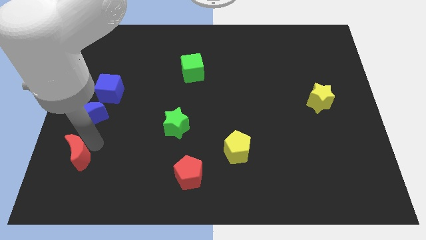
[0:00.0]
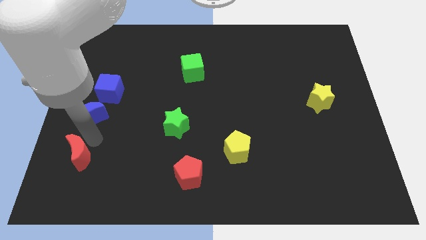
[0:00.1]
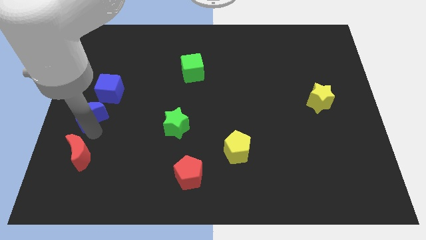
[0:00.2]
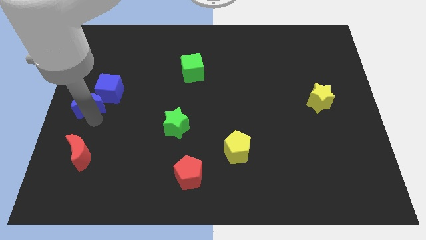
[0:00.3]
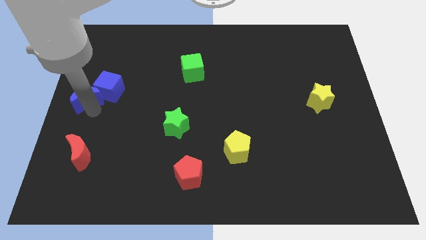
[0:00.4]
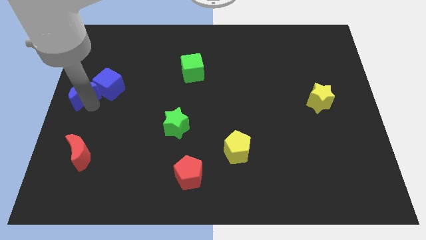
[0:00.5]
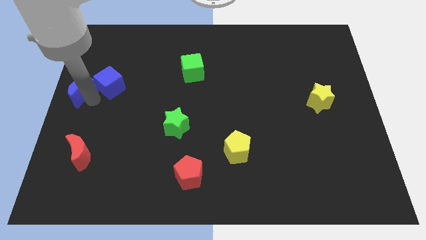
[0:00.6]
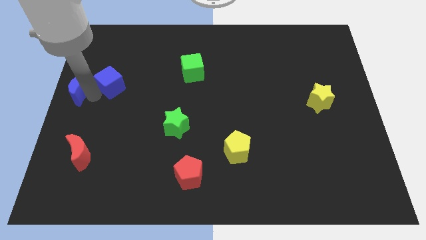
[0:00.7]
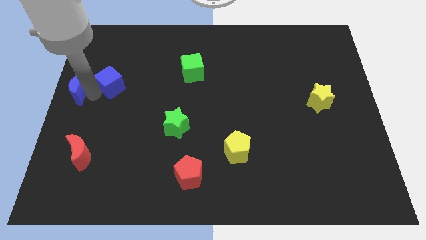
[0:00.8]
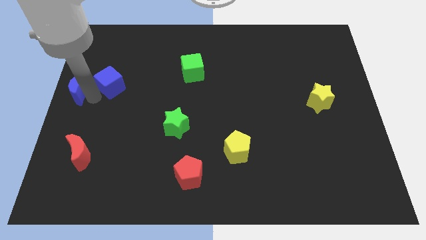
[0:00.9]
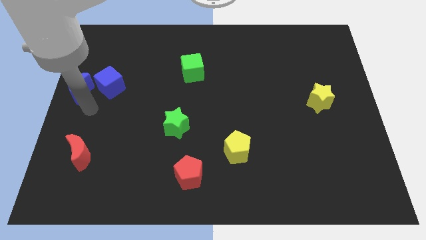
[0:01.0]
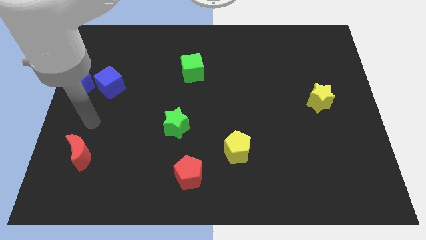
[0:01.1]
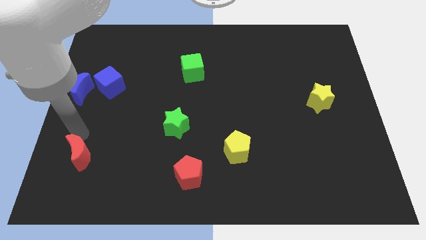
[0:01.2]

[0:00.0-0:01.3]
place blue moon to the left of blue cube

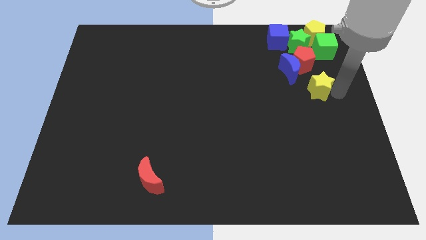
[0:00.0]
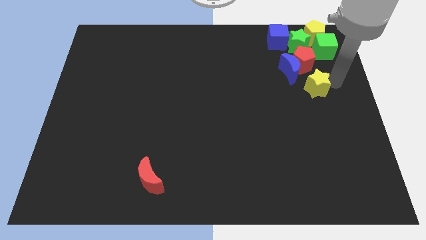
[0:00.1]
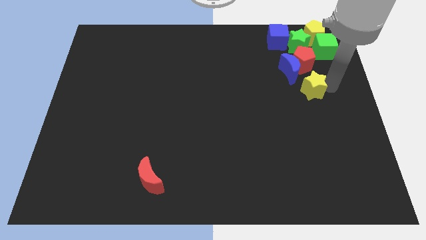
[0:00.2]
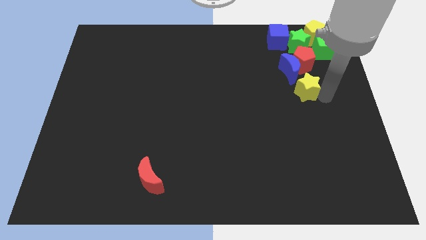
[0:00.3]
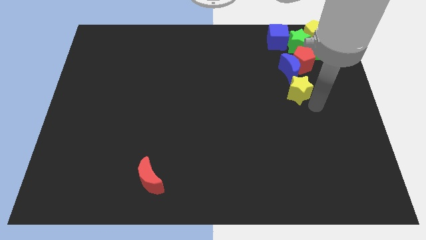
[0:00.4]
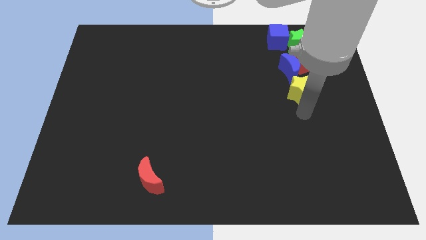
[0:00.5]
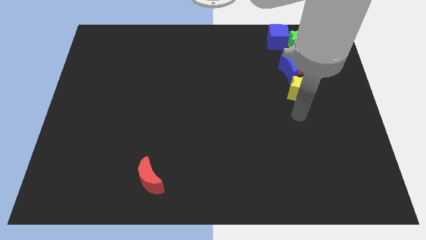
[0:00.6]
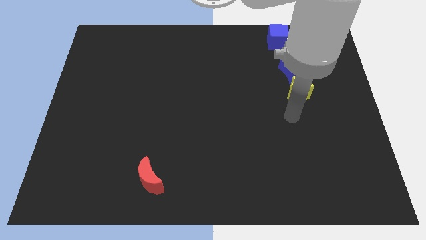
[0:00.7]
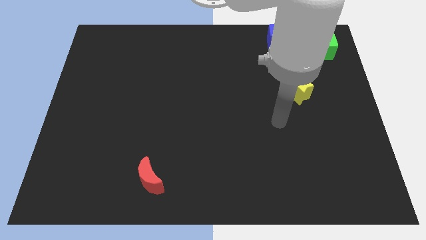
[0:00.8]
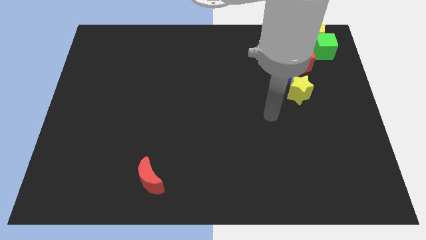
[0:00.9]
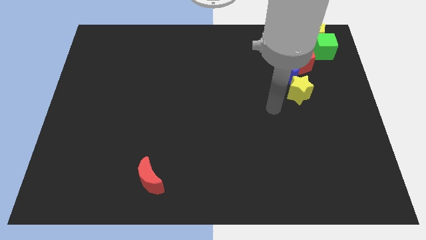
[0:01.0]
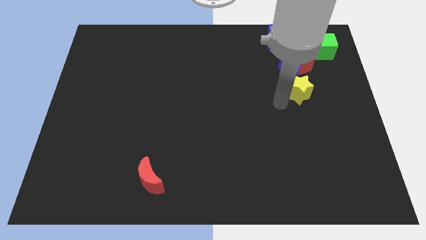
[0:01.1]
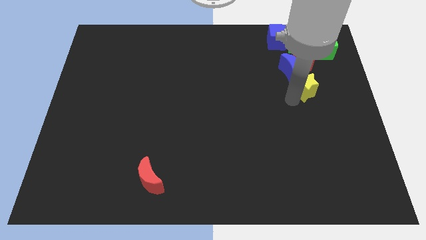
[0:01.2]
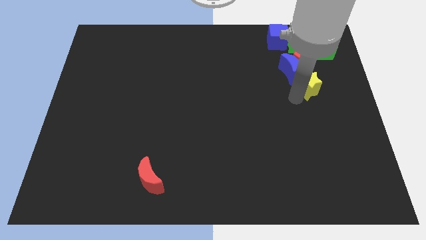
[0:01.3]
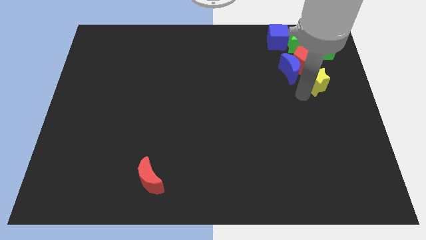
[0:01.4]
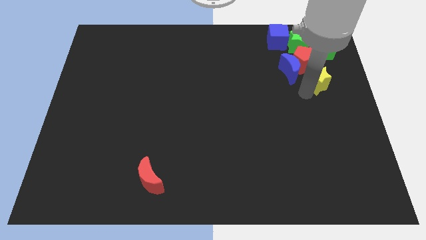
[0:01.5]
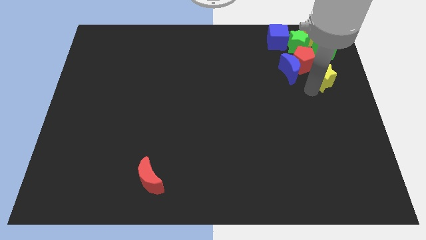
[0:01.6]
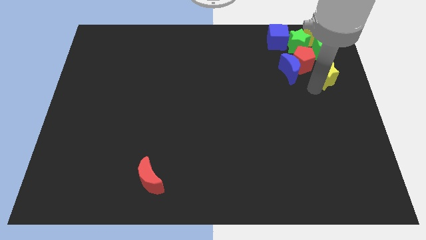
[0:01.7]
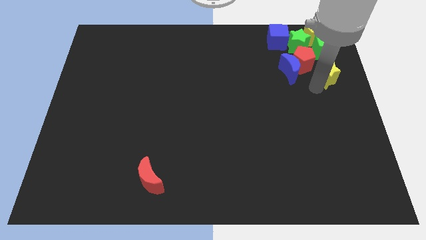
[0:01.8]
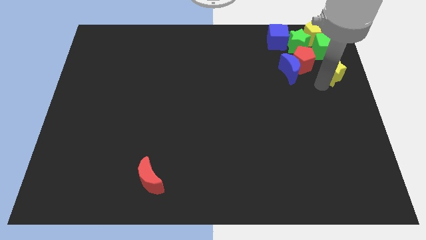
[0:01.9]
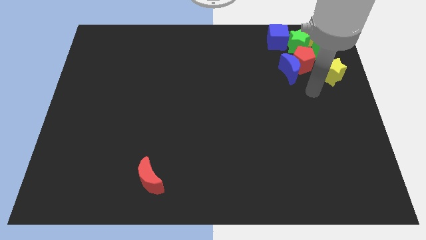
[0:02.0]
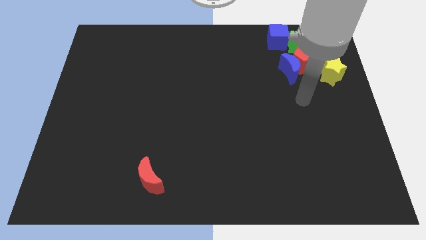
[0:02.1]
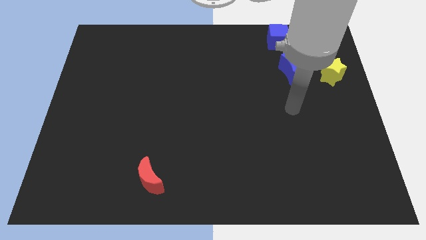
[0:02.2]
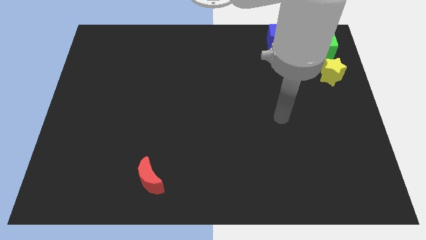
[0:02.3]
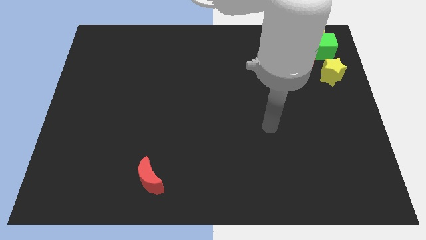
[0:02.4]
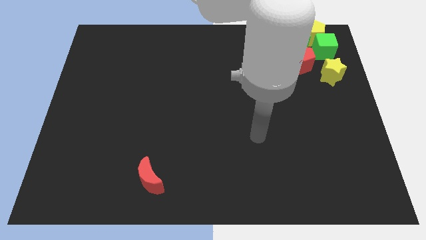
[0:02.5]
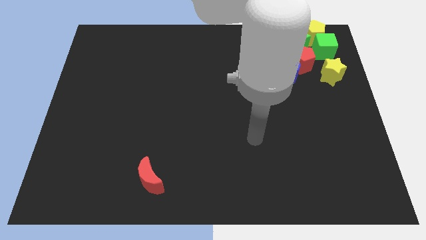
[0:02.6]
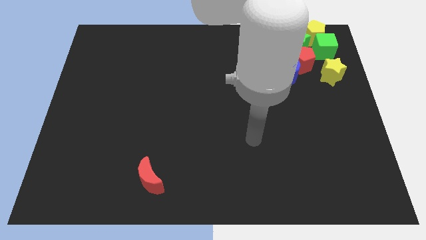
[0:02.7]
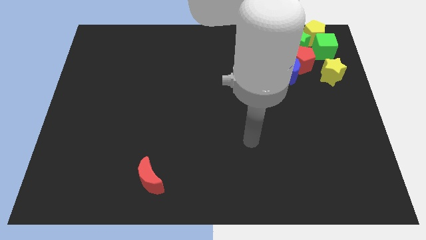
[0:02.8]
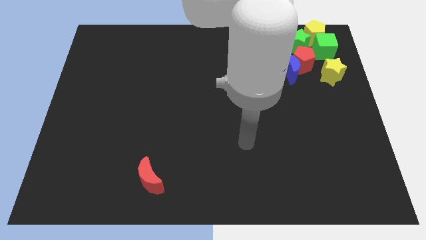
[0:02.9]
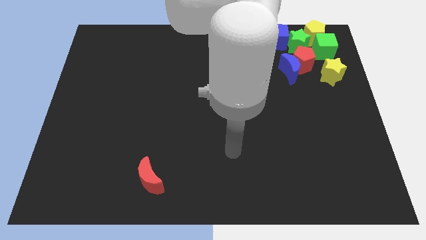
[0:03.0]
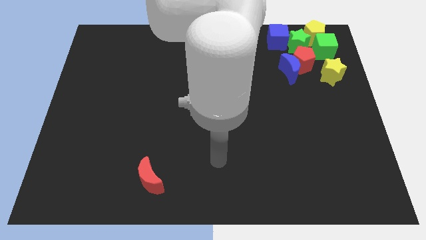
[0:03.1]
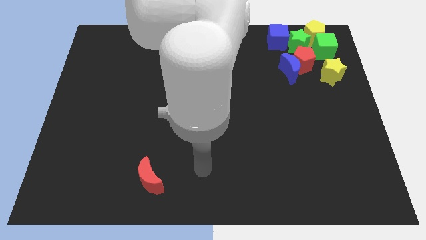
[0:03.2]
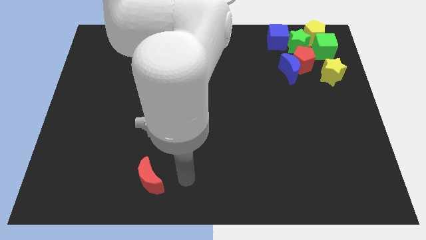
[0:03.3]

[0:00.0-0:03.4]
place the yellow star to the bottom side of the green cube

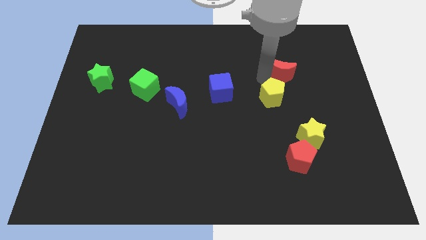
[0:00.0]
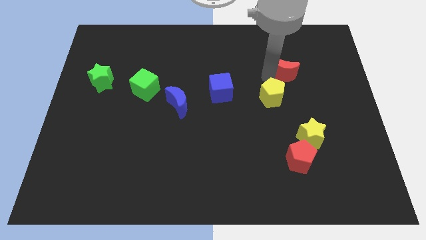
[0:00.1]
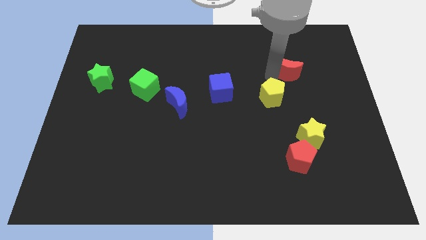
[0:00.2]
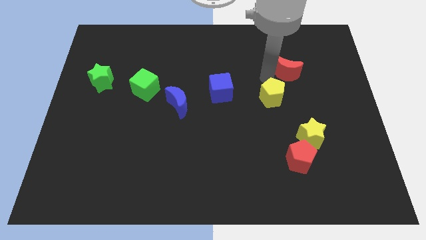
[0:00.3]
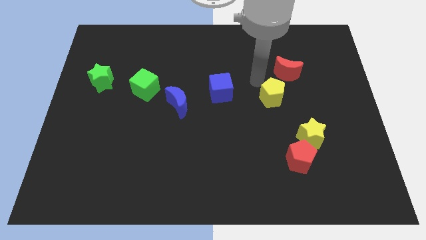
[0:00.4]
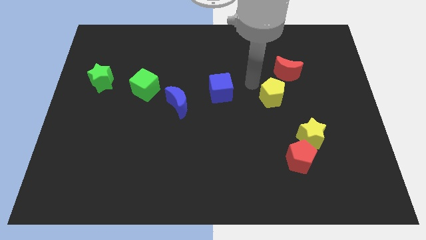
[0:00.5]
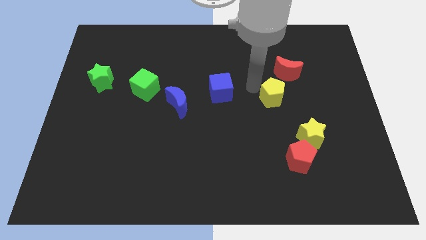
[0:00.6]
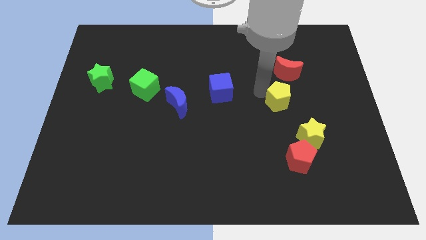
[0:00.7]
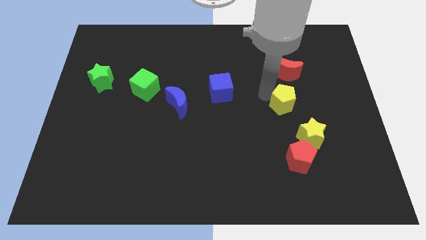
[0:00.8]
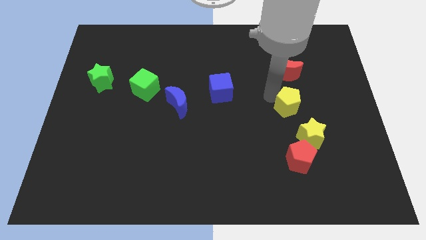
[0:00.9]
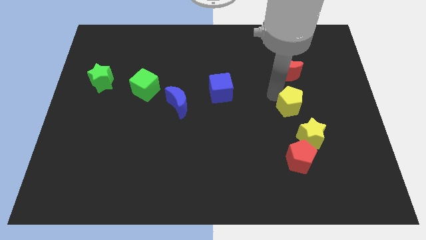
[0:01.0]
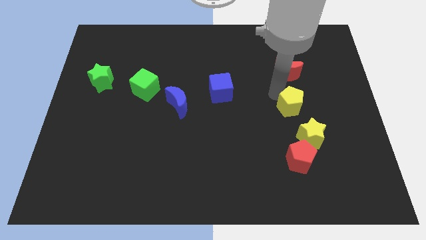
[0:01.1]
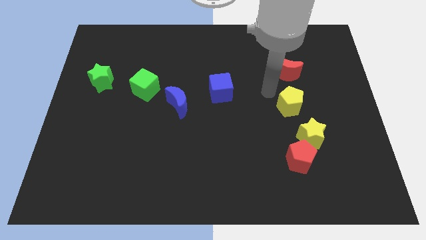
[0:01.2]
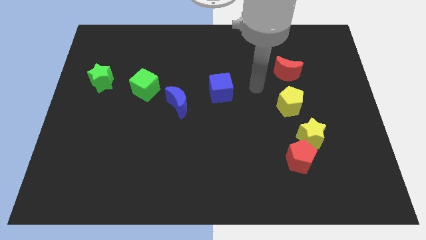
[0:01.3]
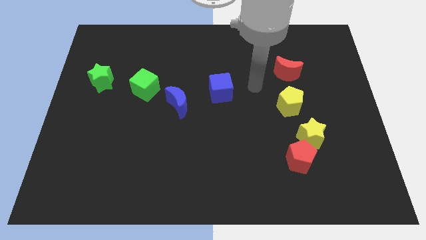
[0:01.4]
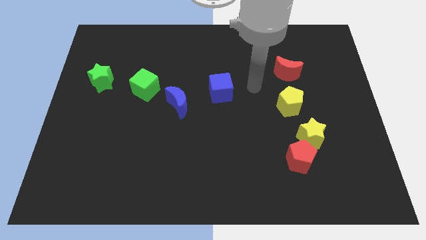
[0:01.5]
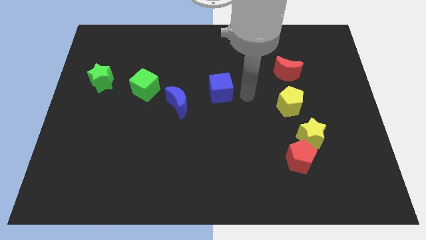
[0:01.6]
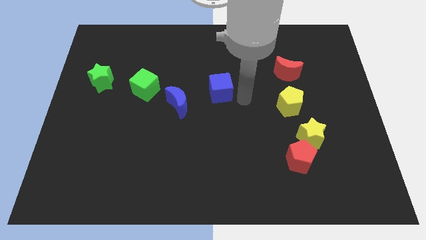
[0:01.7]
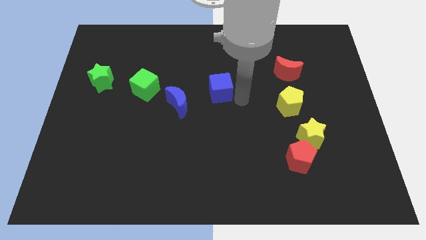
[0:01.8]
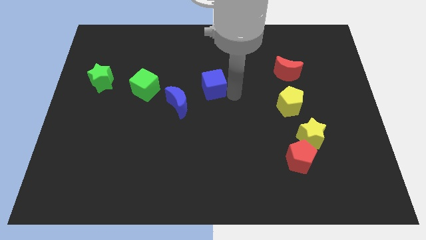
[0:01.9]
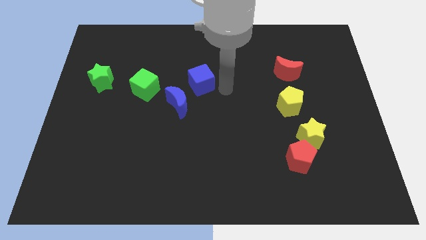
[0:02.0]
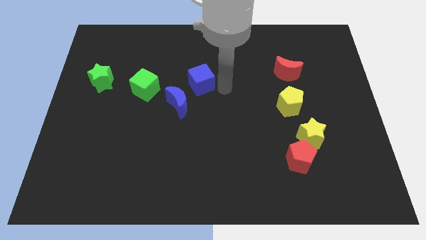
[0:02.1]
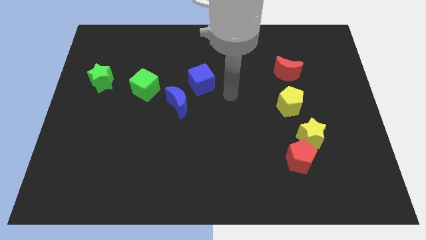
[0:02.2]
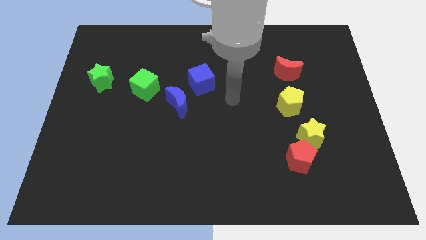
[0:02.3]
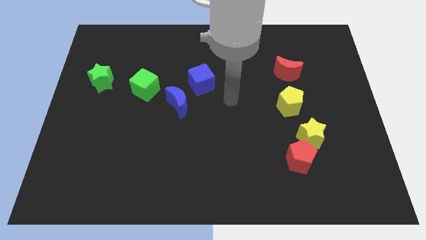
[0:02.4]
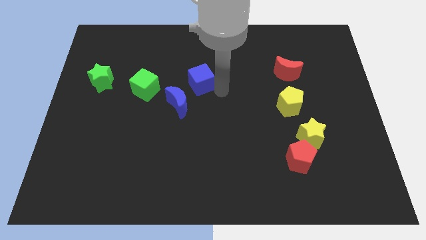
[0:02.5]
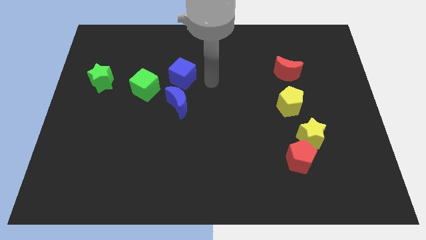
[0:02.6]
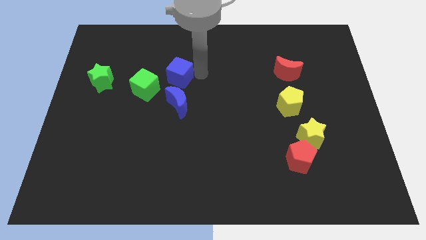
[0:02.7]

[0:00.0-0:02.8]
push blue cube above blue crescent

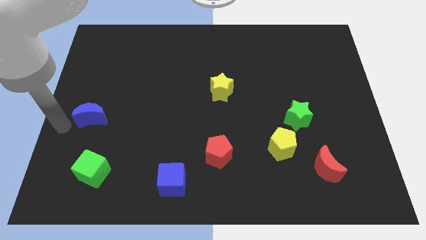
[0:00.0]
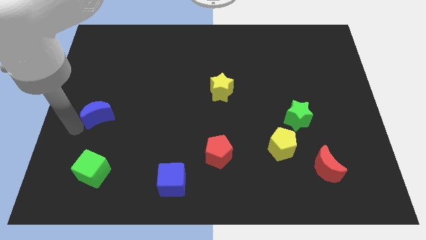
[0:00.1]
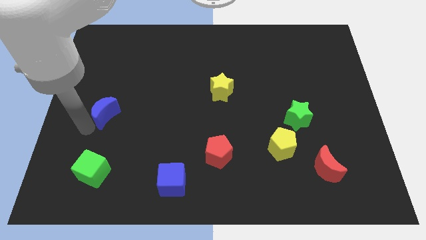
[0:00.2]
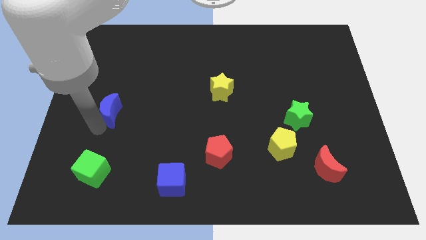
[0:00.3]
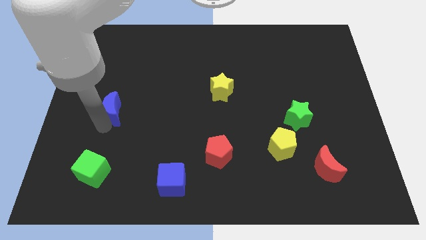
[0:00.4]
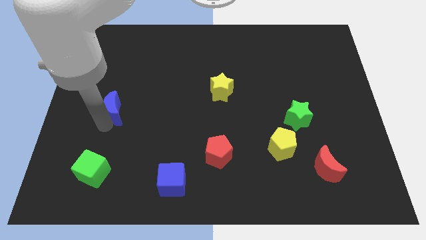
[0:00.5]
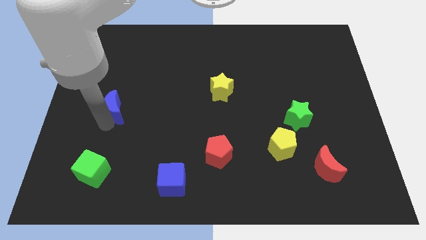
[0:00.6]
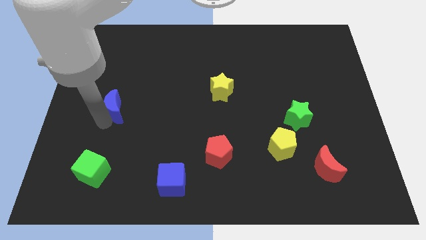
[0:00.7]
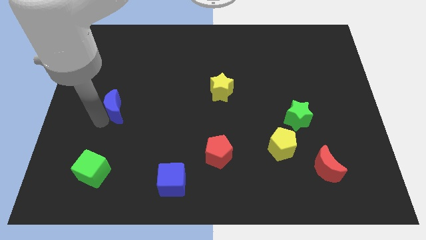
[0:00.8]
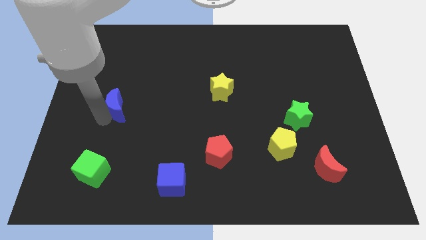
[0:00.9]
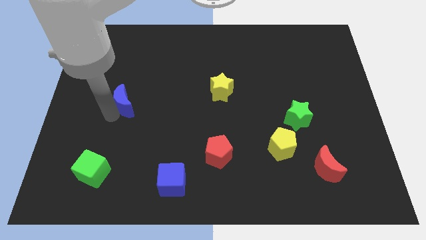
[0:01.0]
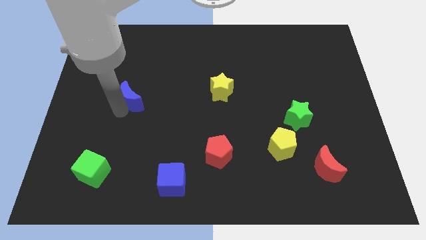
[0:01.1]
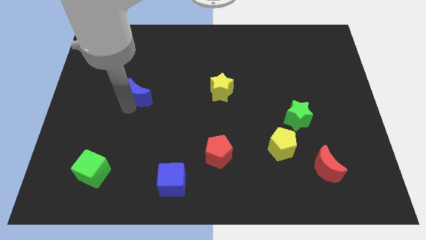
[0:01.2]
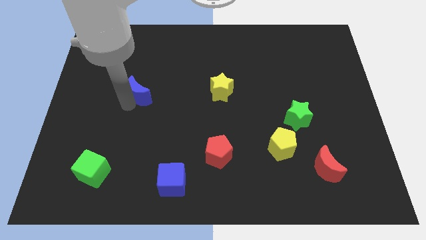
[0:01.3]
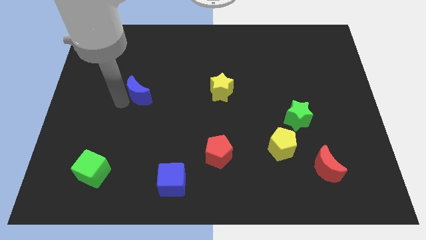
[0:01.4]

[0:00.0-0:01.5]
place the blue moon parallel to yellow star
